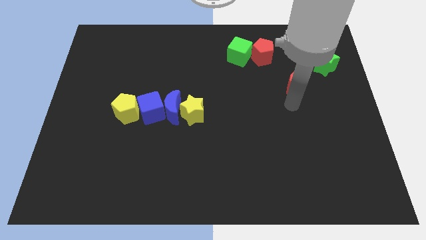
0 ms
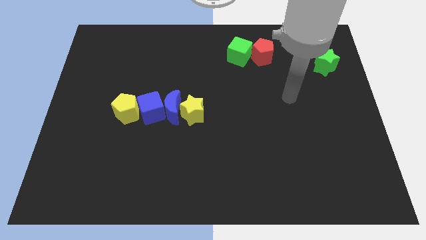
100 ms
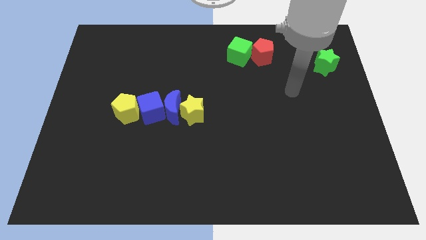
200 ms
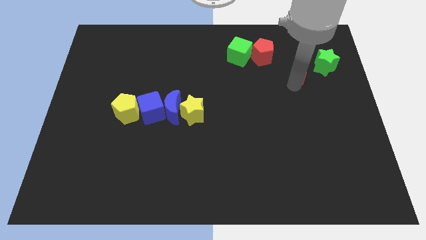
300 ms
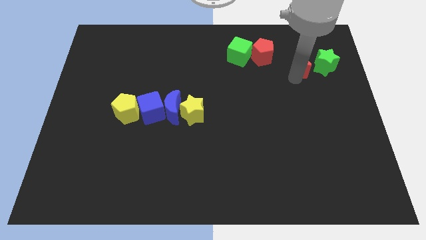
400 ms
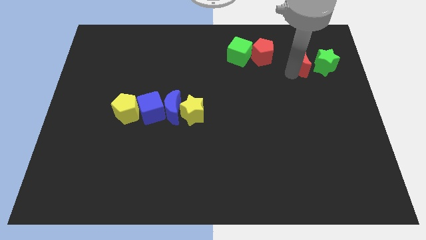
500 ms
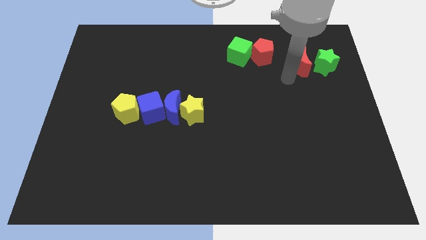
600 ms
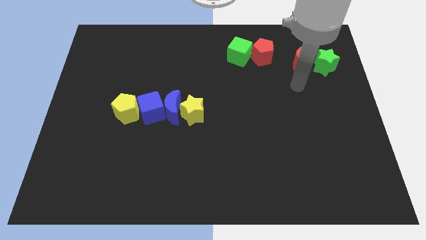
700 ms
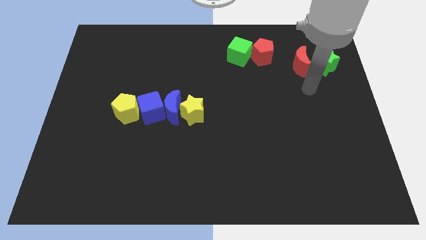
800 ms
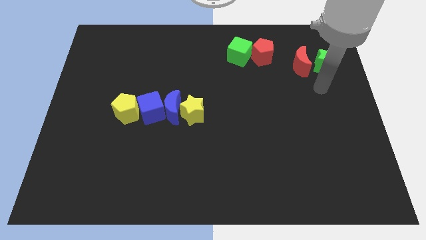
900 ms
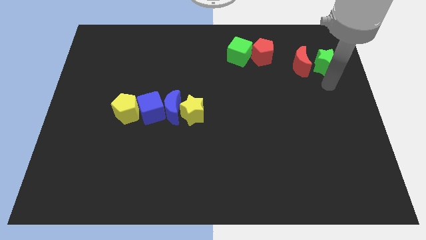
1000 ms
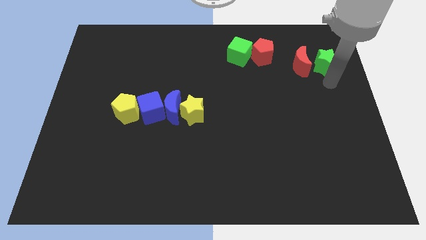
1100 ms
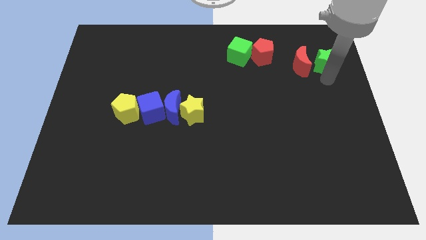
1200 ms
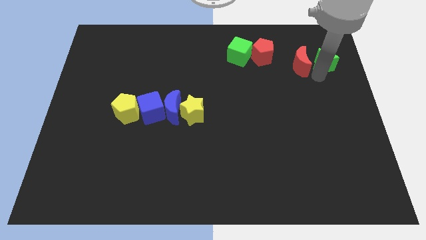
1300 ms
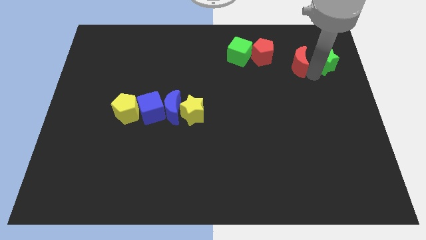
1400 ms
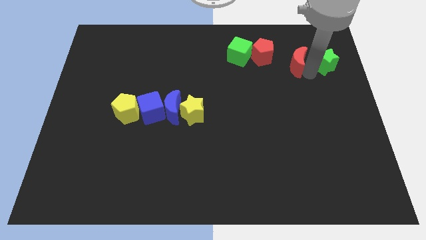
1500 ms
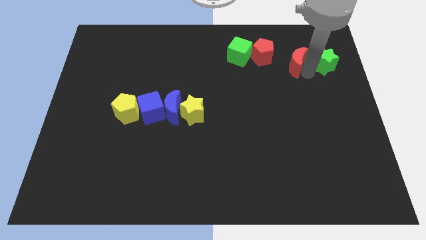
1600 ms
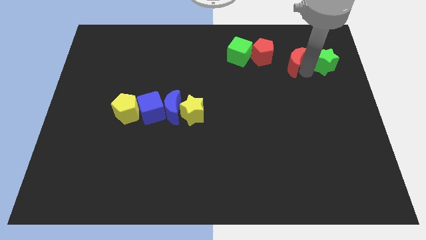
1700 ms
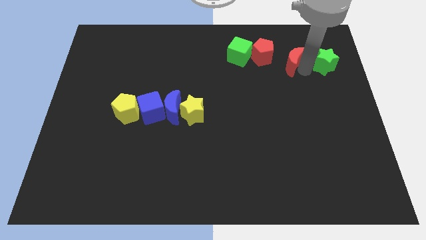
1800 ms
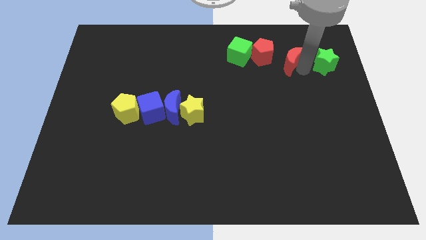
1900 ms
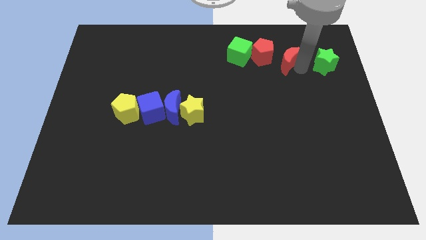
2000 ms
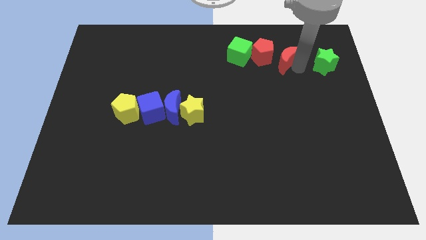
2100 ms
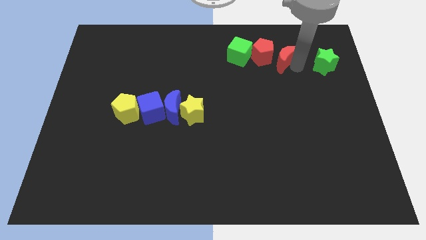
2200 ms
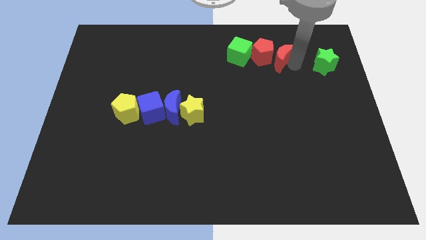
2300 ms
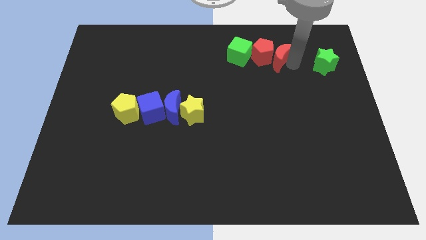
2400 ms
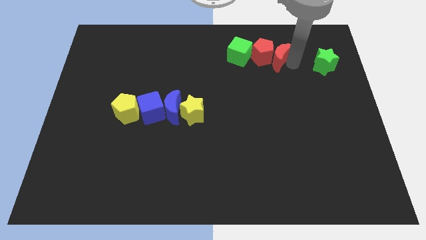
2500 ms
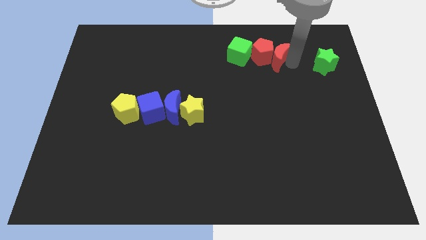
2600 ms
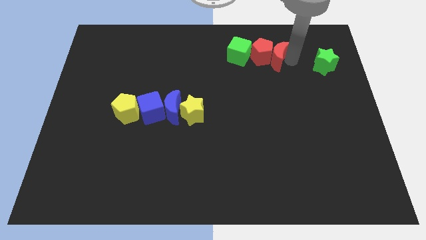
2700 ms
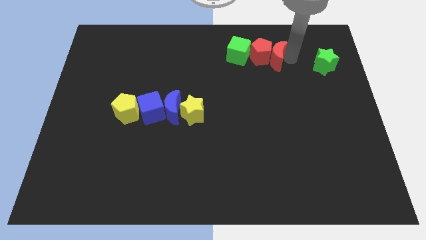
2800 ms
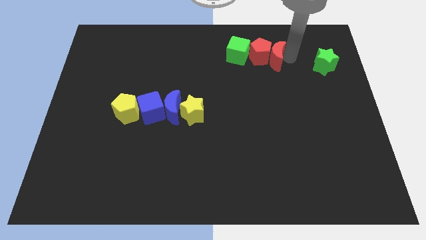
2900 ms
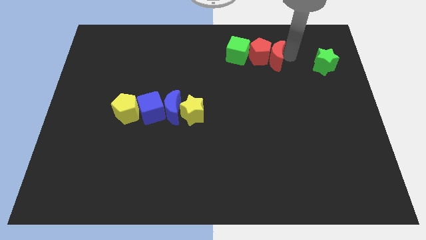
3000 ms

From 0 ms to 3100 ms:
slide the red crescent into the right side of the red pentagon

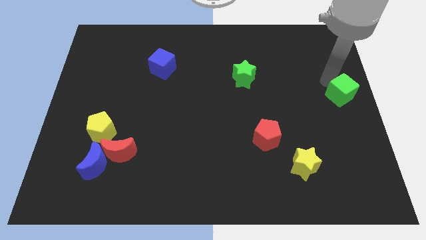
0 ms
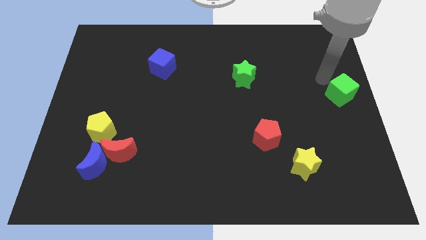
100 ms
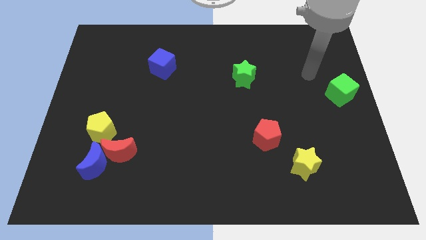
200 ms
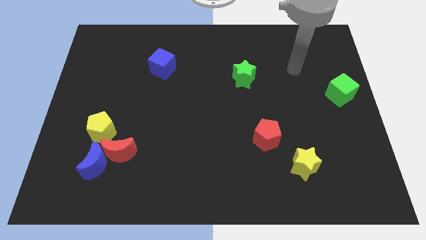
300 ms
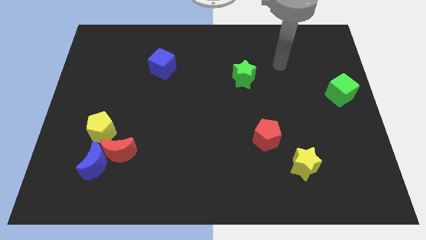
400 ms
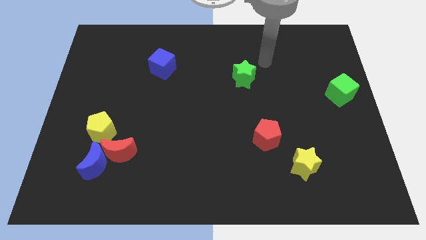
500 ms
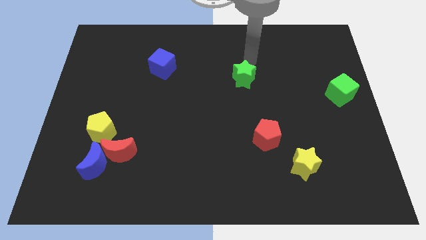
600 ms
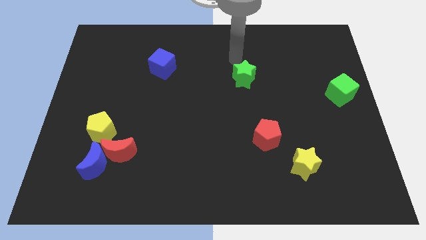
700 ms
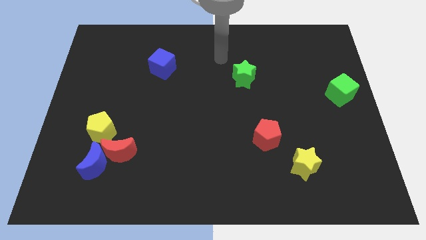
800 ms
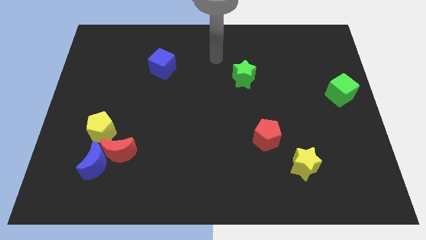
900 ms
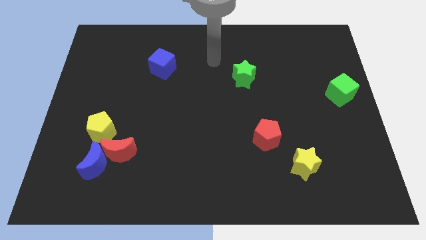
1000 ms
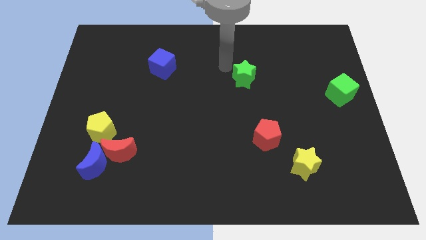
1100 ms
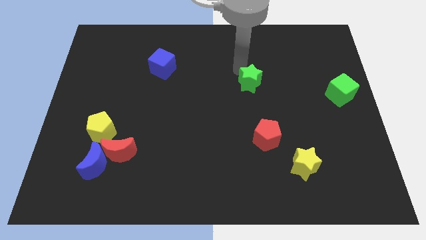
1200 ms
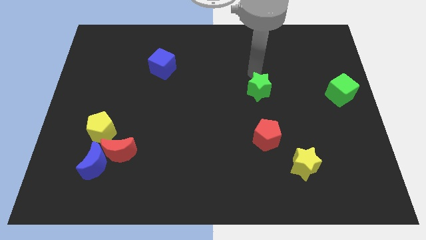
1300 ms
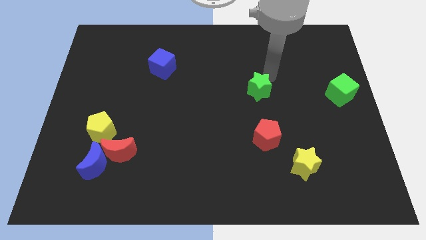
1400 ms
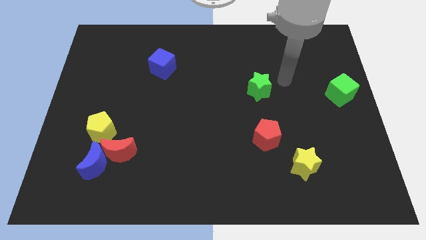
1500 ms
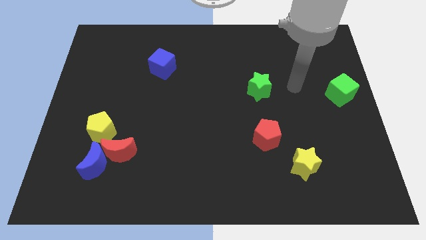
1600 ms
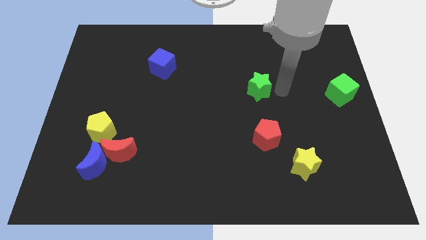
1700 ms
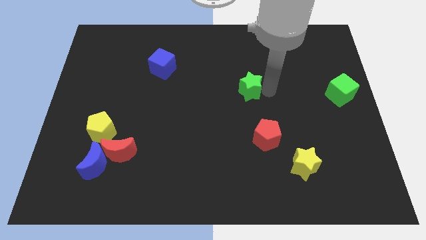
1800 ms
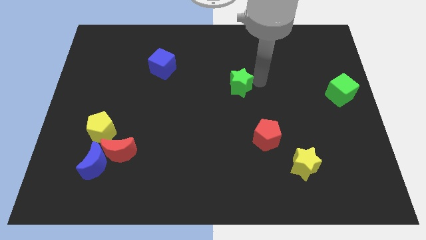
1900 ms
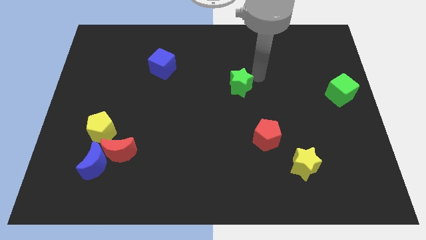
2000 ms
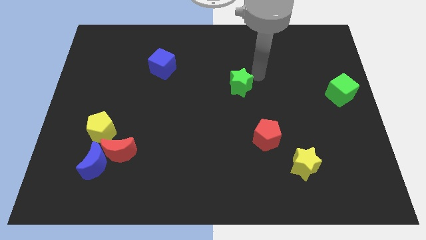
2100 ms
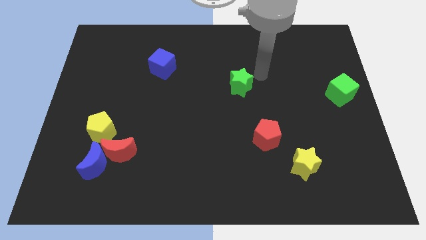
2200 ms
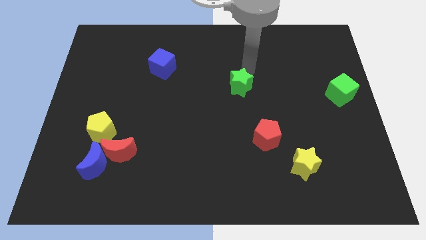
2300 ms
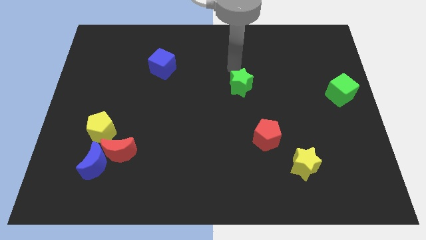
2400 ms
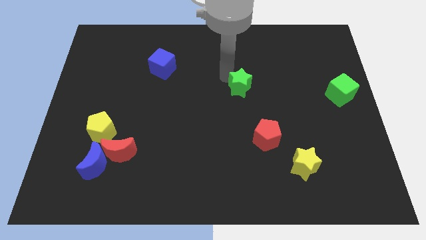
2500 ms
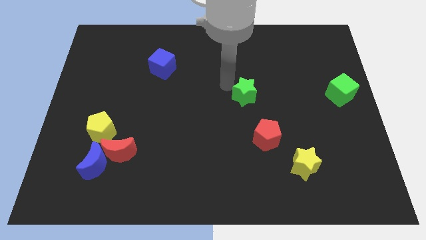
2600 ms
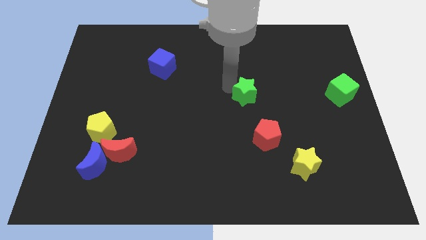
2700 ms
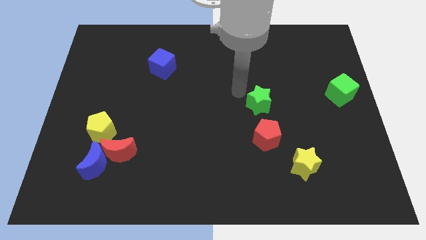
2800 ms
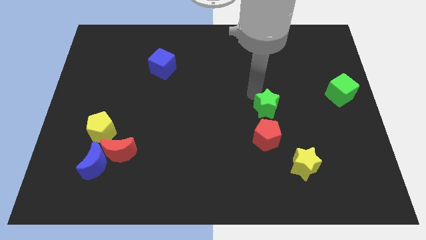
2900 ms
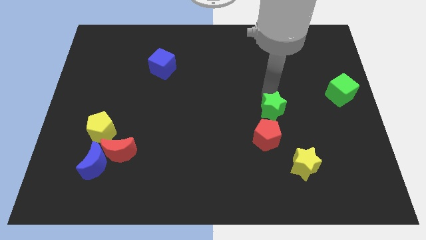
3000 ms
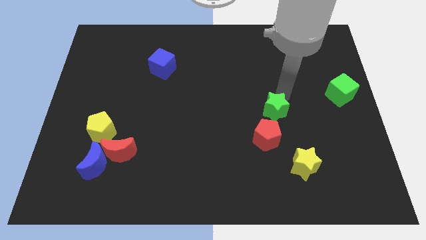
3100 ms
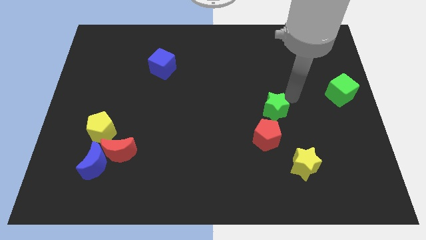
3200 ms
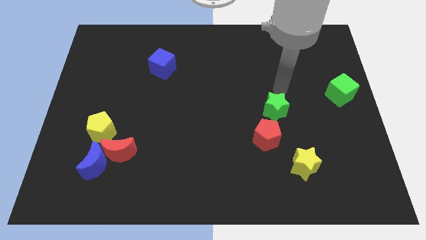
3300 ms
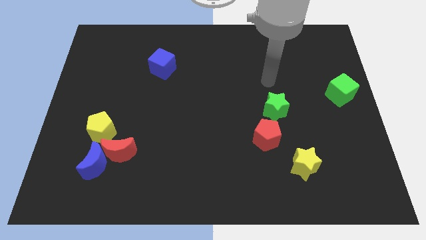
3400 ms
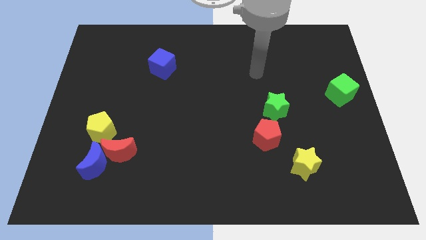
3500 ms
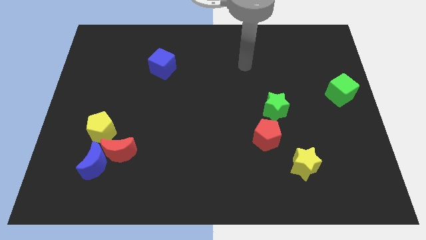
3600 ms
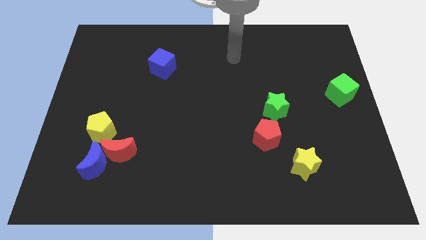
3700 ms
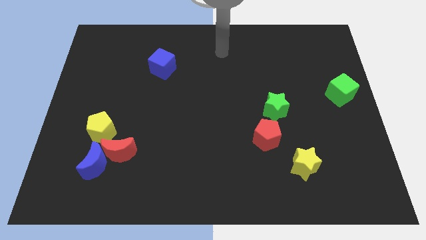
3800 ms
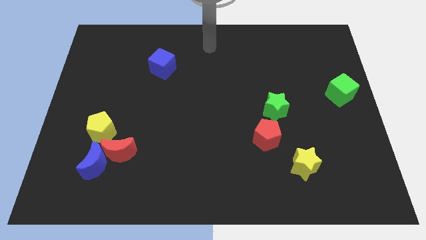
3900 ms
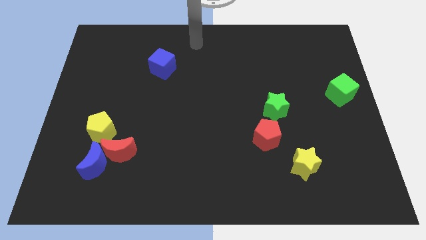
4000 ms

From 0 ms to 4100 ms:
place the green star above the red pentagon

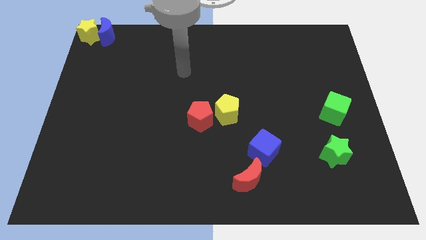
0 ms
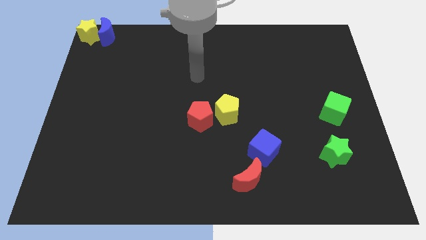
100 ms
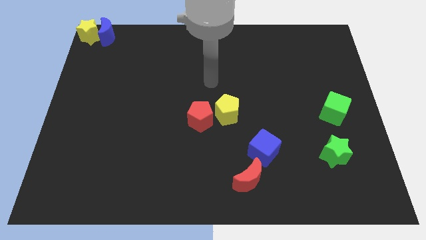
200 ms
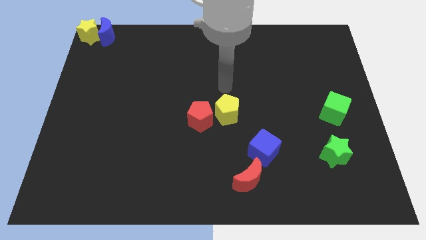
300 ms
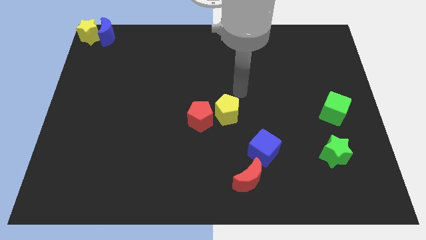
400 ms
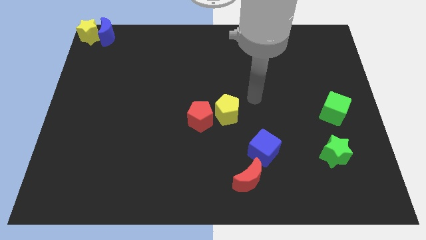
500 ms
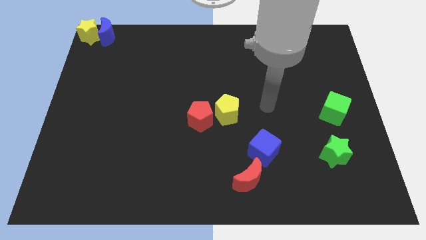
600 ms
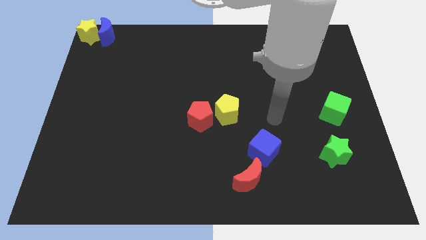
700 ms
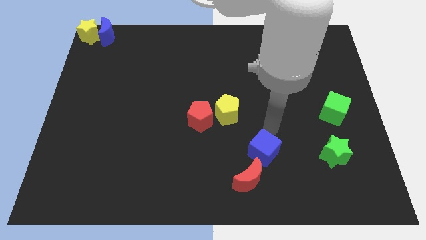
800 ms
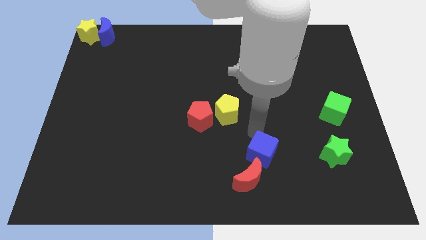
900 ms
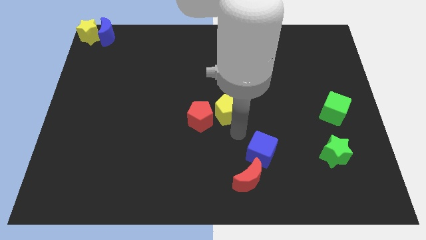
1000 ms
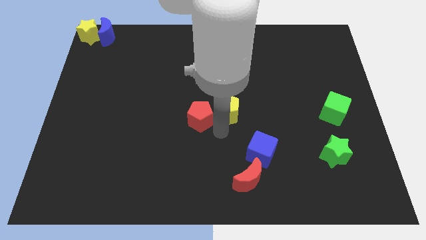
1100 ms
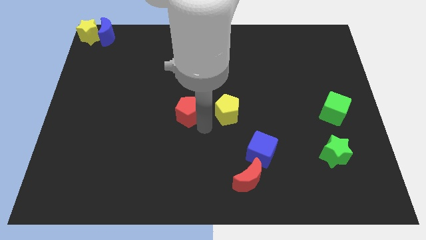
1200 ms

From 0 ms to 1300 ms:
place the arm diagonally to the red pentagon

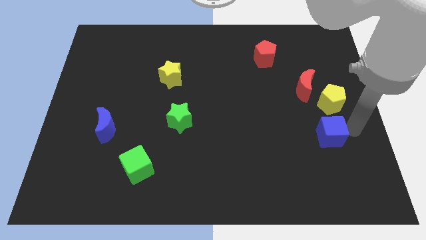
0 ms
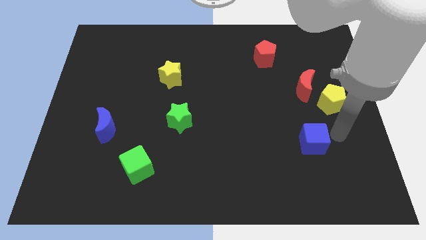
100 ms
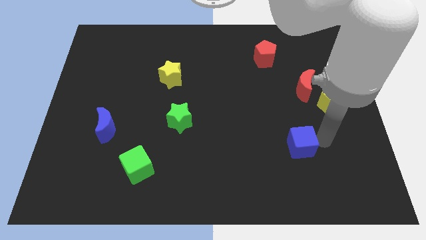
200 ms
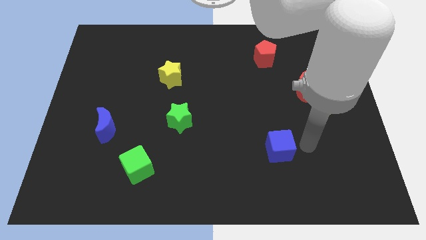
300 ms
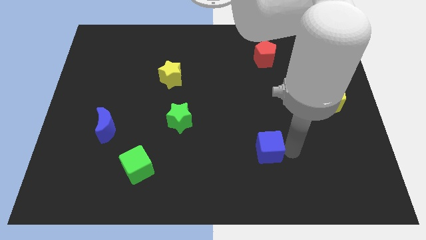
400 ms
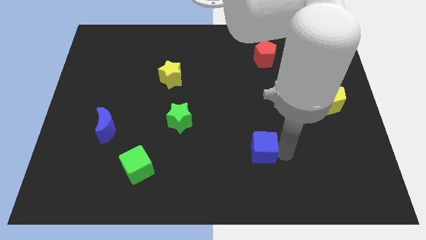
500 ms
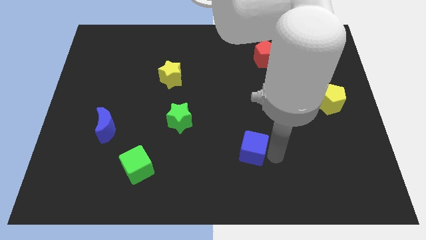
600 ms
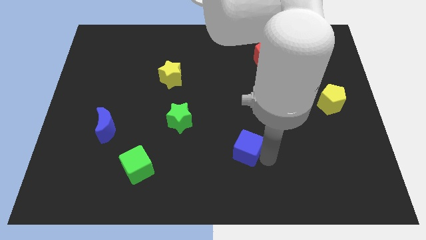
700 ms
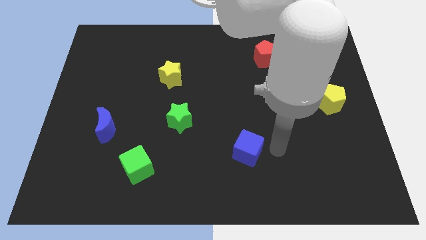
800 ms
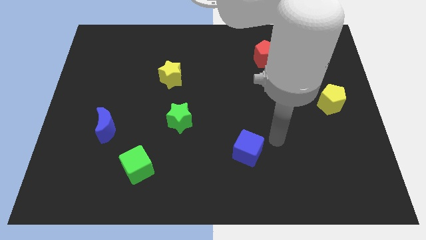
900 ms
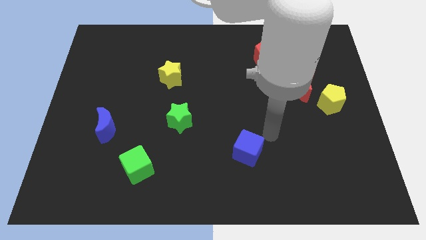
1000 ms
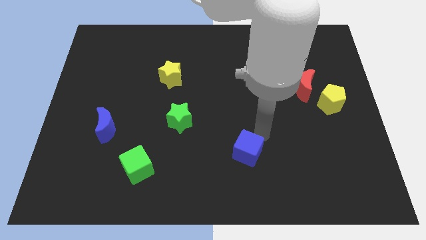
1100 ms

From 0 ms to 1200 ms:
push the blue cube towards the green cube
